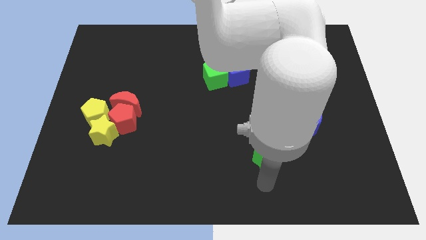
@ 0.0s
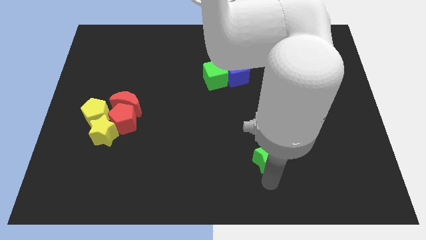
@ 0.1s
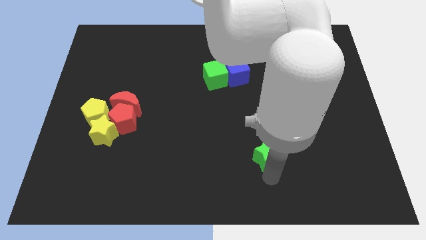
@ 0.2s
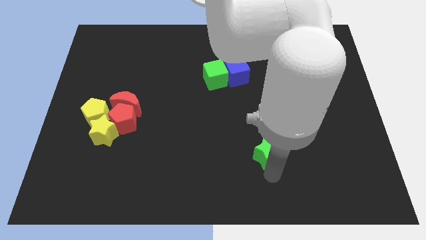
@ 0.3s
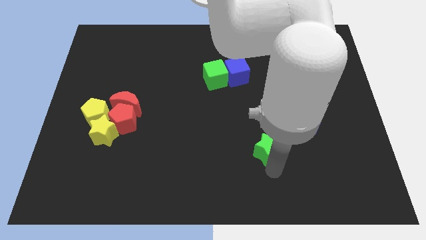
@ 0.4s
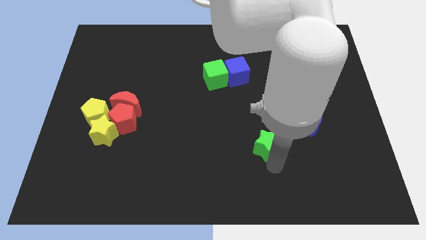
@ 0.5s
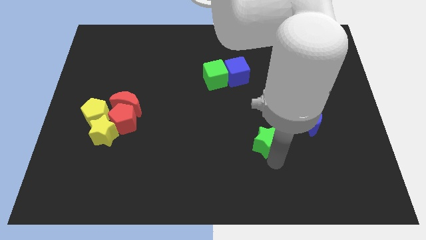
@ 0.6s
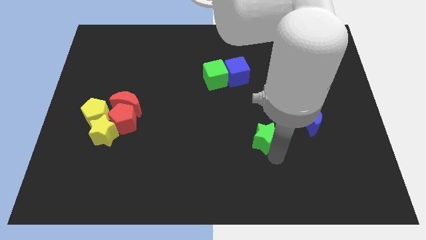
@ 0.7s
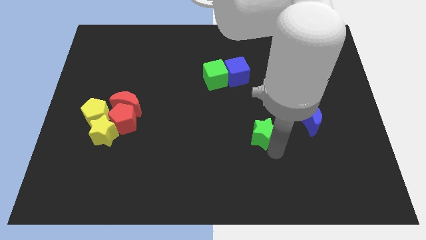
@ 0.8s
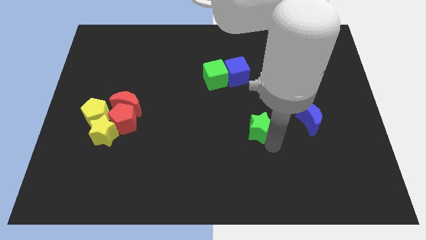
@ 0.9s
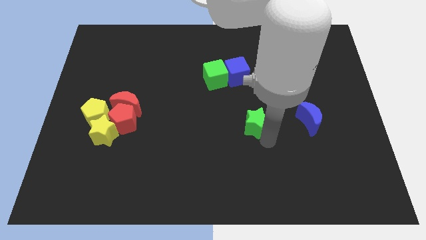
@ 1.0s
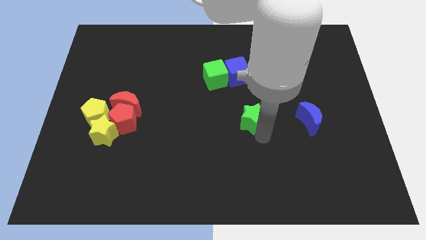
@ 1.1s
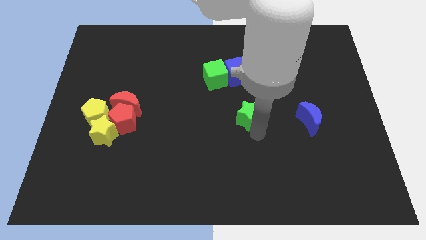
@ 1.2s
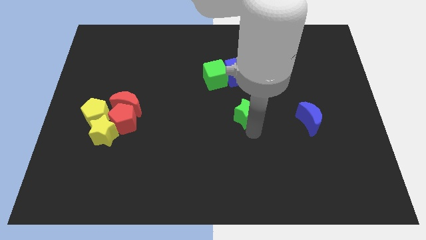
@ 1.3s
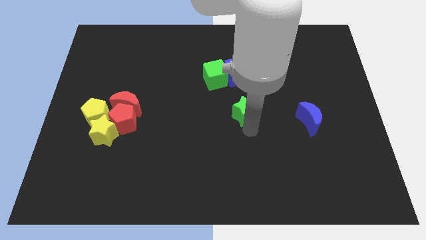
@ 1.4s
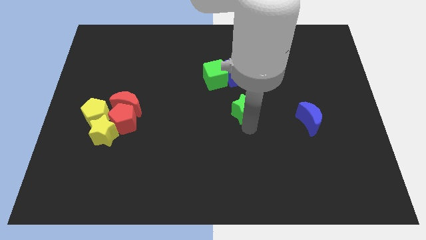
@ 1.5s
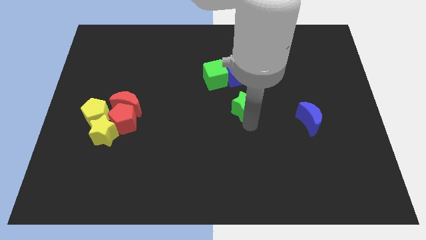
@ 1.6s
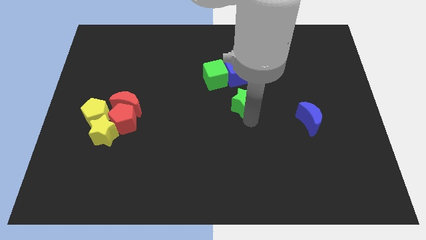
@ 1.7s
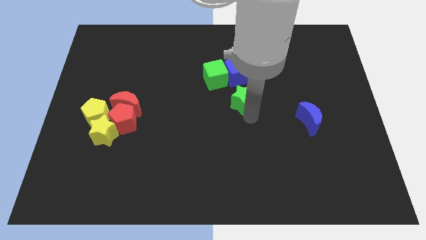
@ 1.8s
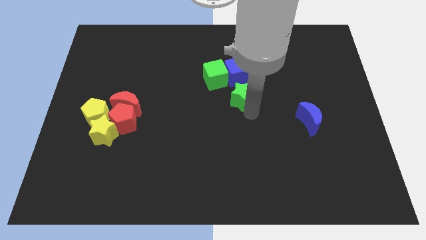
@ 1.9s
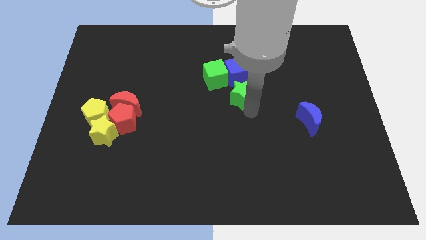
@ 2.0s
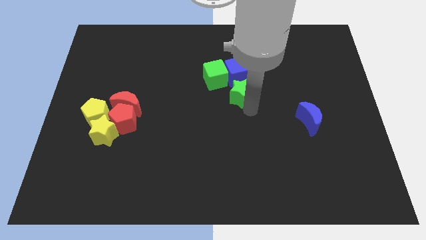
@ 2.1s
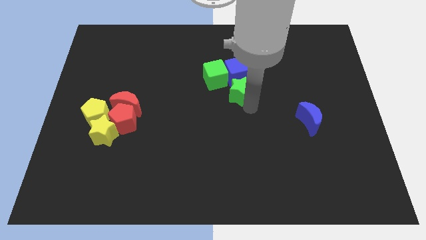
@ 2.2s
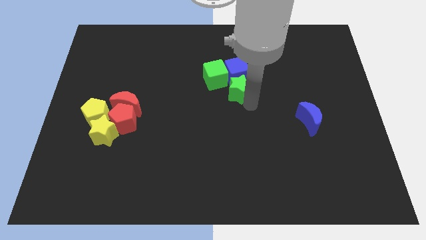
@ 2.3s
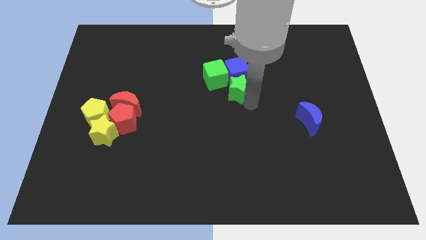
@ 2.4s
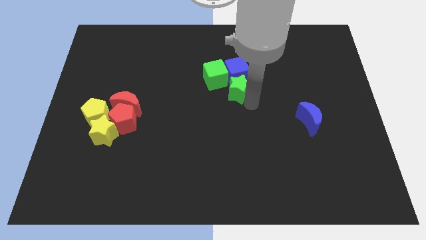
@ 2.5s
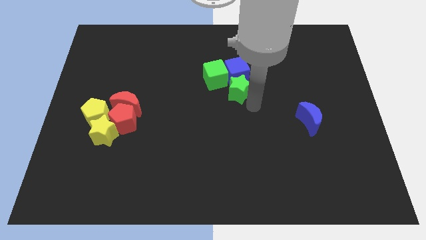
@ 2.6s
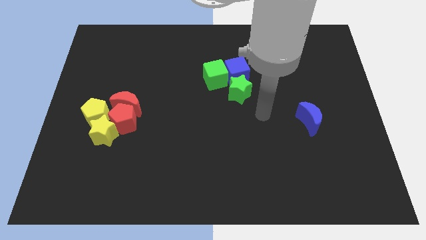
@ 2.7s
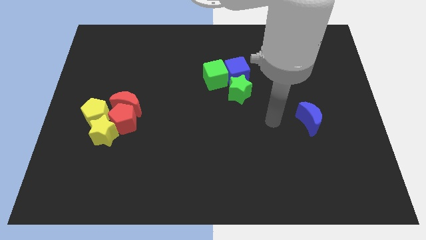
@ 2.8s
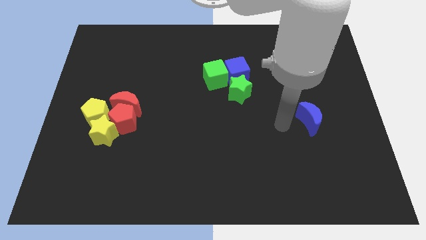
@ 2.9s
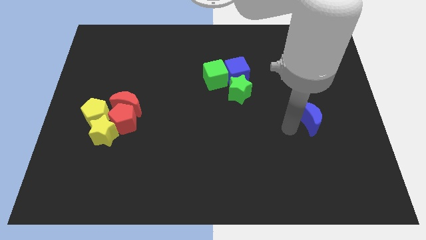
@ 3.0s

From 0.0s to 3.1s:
move the green star to the bottom side of the blue cube

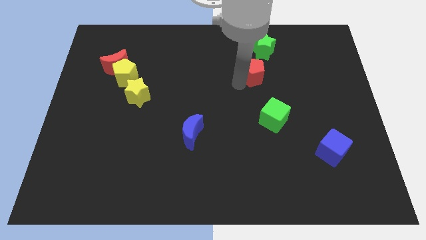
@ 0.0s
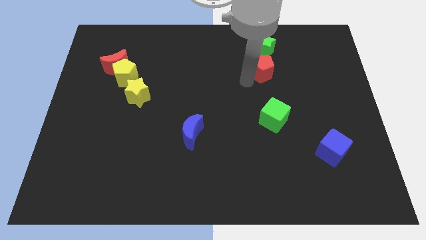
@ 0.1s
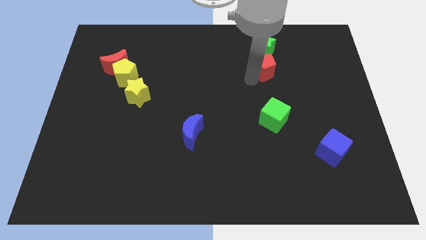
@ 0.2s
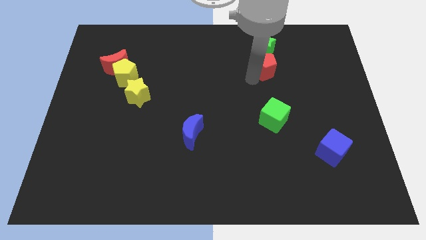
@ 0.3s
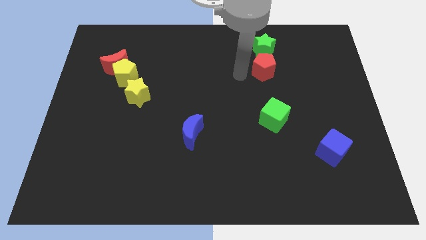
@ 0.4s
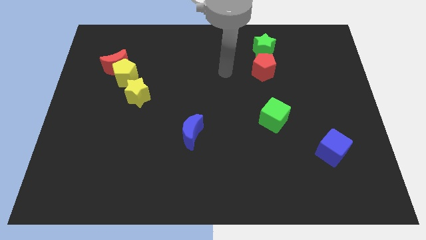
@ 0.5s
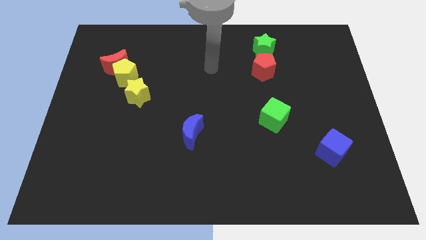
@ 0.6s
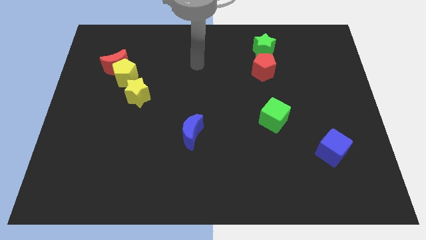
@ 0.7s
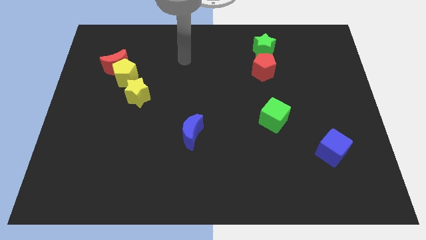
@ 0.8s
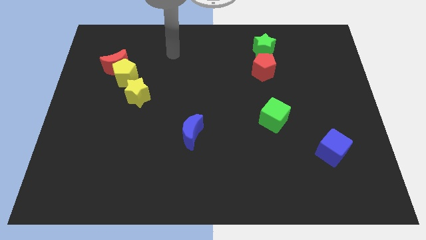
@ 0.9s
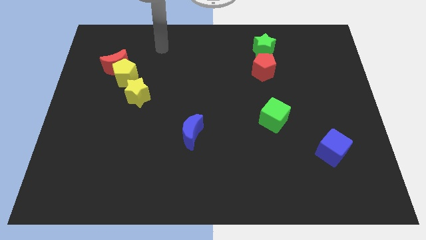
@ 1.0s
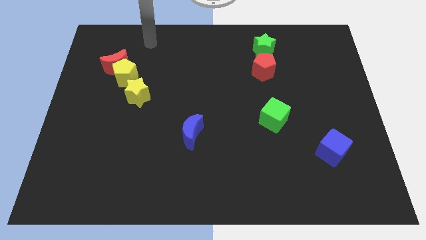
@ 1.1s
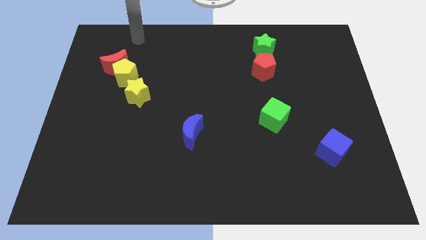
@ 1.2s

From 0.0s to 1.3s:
place the red pentagon below the green star

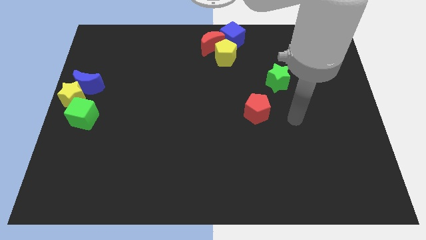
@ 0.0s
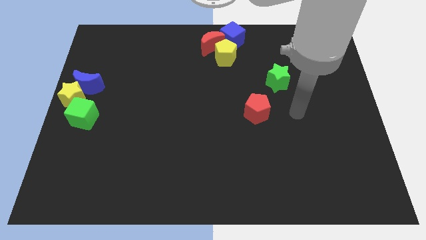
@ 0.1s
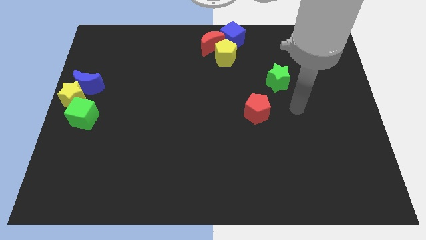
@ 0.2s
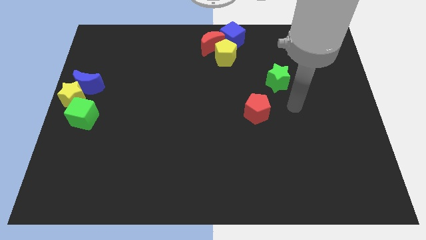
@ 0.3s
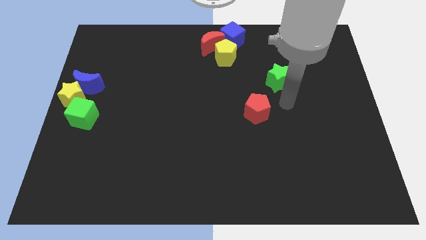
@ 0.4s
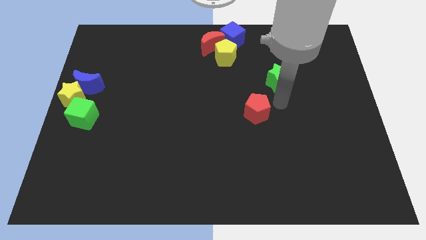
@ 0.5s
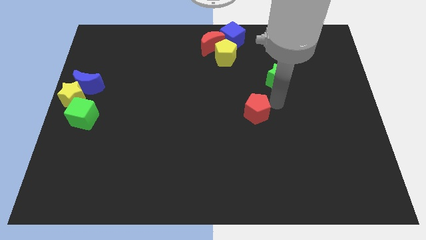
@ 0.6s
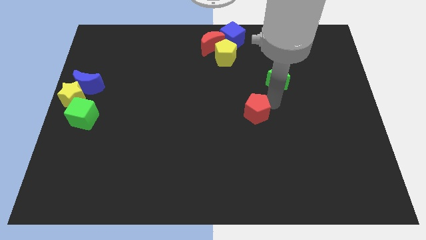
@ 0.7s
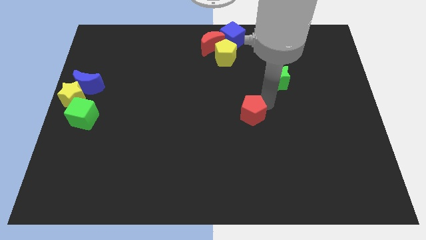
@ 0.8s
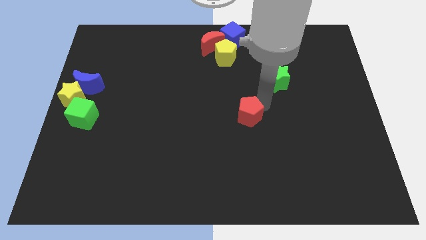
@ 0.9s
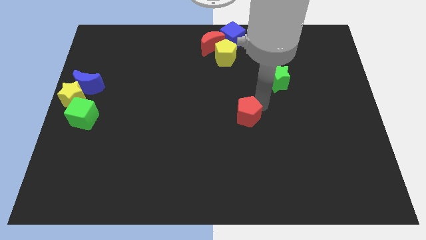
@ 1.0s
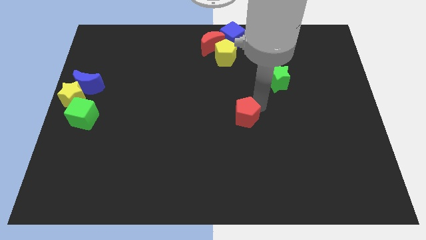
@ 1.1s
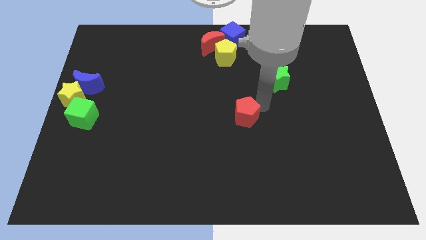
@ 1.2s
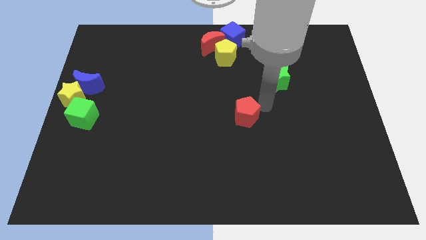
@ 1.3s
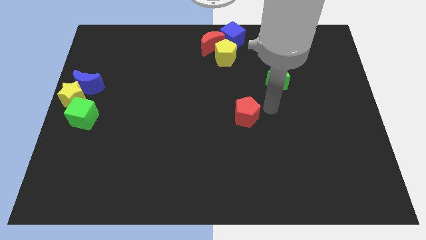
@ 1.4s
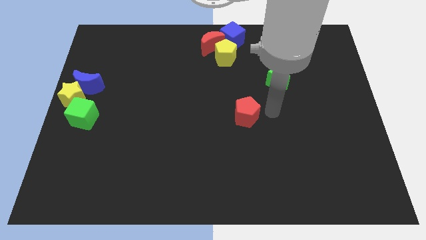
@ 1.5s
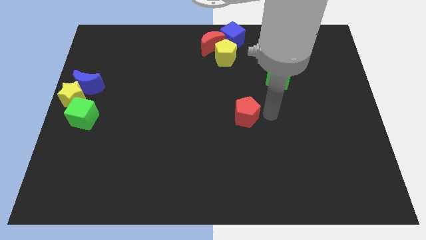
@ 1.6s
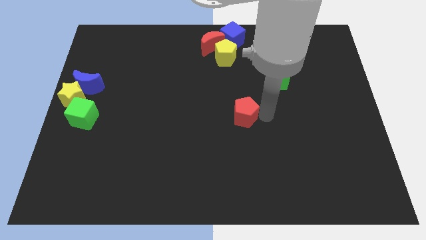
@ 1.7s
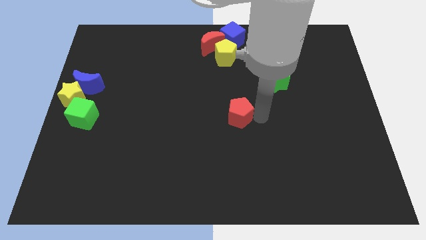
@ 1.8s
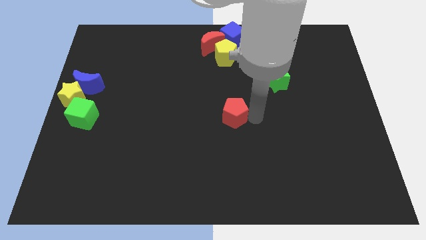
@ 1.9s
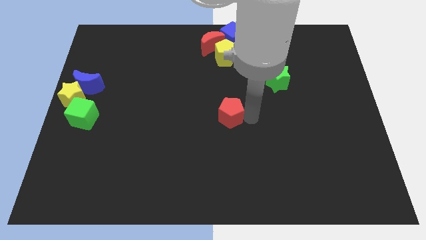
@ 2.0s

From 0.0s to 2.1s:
move the red pentagon slightly to the left side of the board

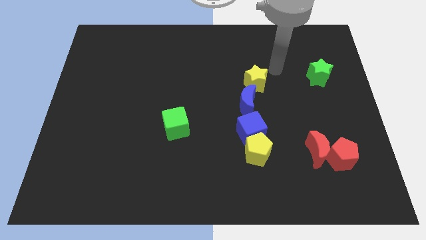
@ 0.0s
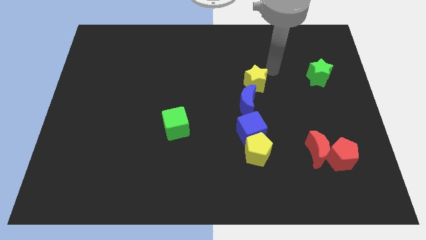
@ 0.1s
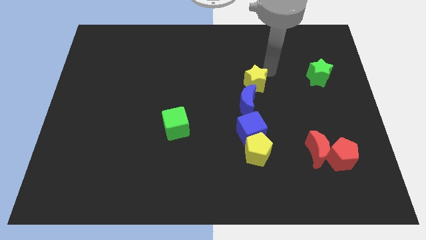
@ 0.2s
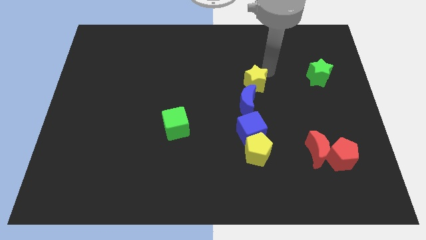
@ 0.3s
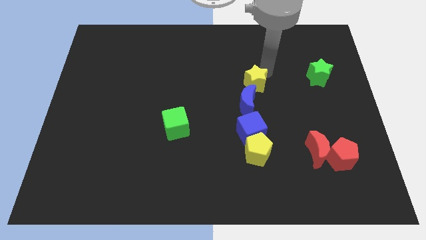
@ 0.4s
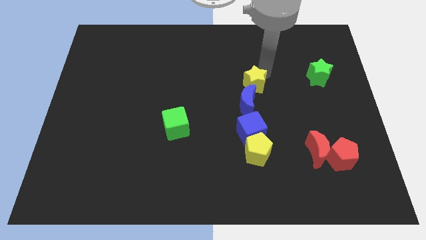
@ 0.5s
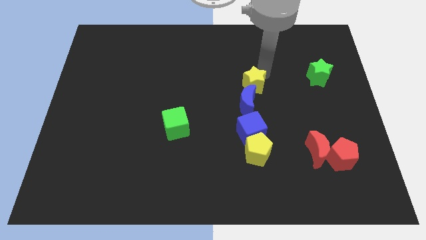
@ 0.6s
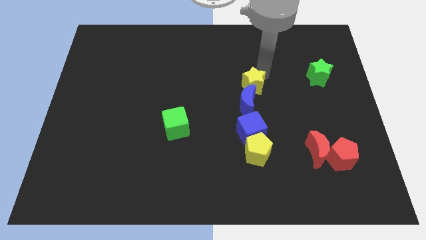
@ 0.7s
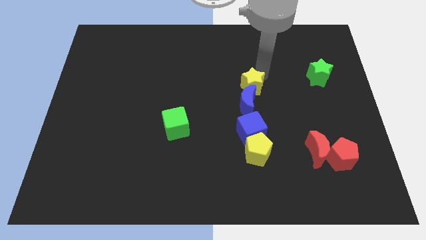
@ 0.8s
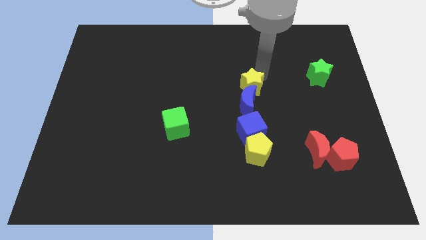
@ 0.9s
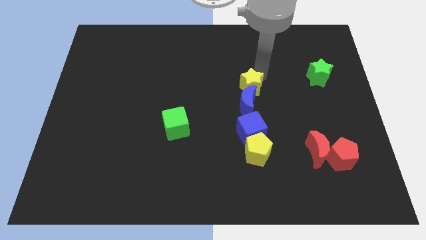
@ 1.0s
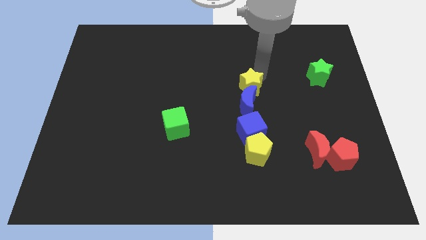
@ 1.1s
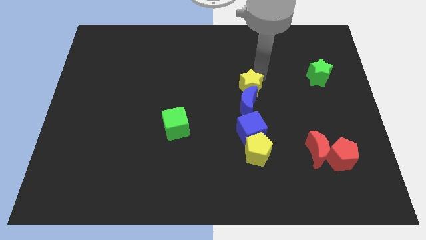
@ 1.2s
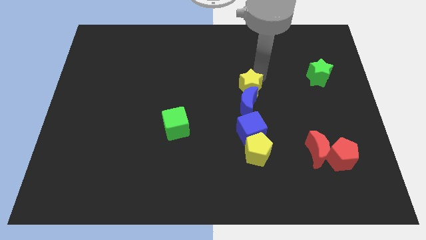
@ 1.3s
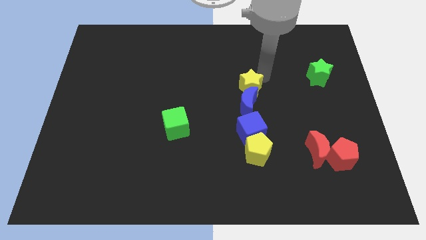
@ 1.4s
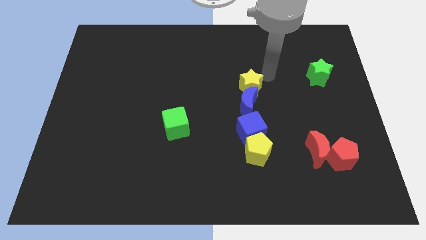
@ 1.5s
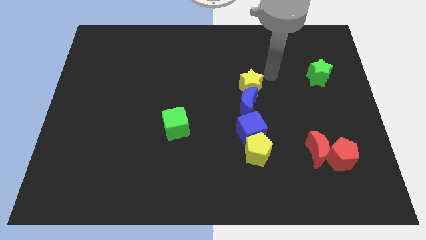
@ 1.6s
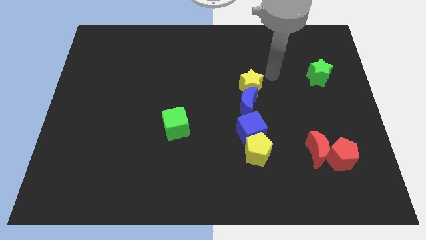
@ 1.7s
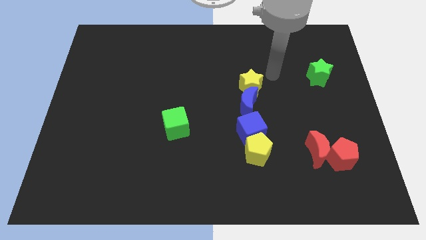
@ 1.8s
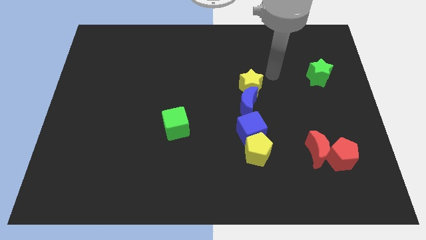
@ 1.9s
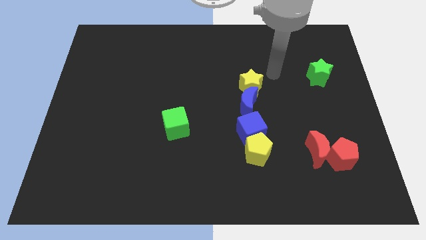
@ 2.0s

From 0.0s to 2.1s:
move the yellow star into the blue crescent

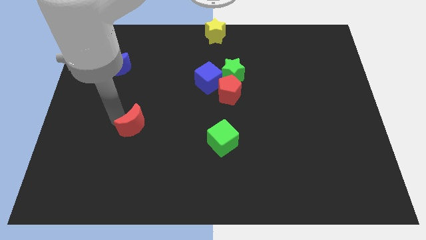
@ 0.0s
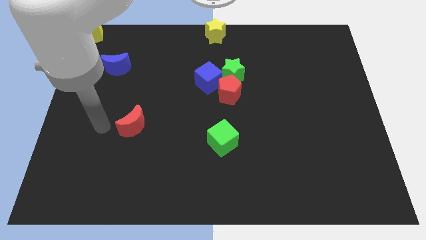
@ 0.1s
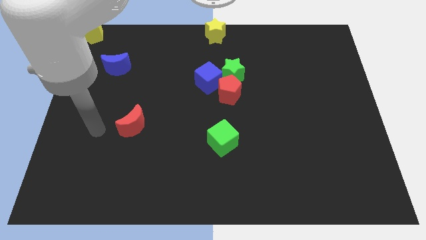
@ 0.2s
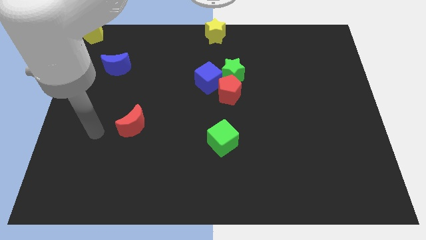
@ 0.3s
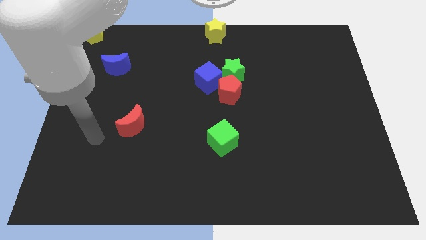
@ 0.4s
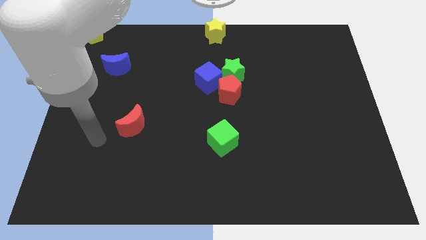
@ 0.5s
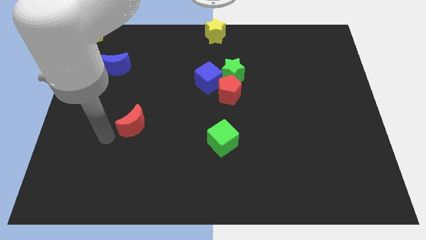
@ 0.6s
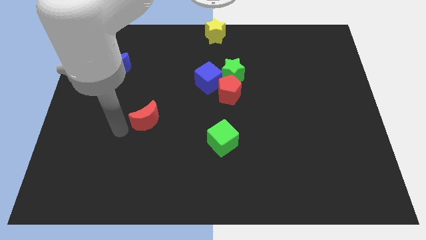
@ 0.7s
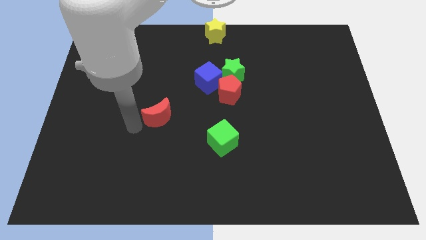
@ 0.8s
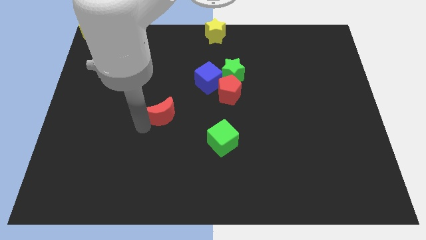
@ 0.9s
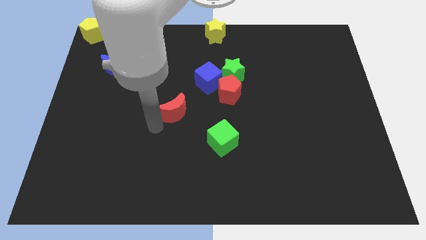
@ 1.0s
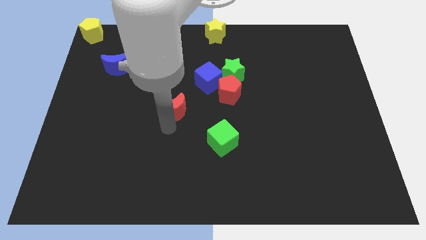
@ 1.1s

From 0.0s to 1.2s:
move red moon towards center
